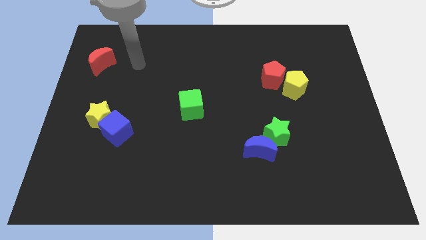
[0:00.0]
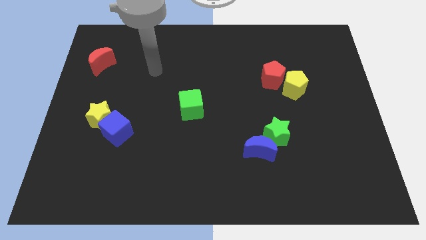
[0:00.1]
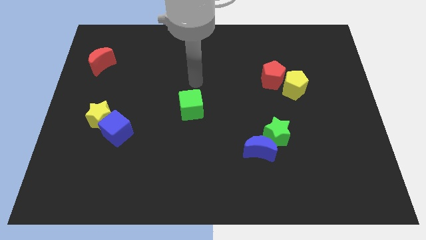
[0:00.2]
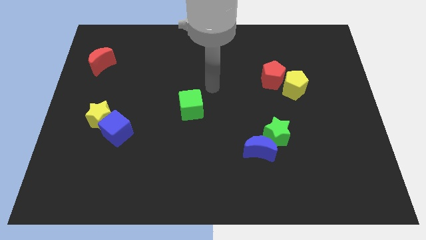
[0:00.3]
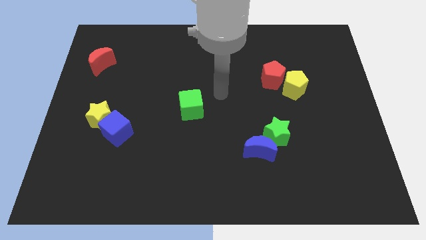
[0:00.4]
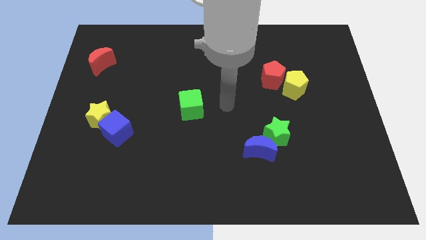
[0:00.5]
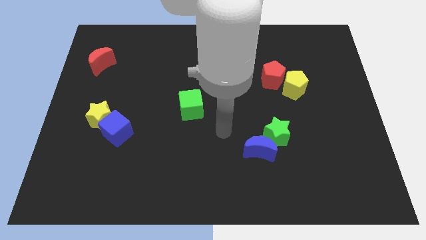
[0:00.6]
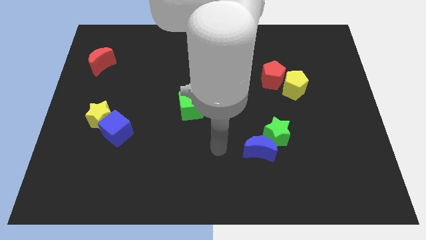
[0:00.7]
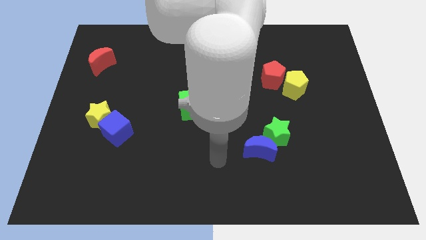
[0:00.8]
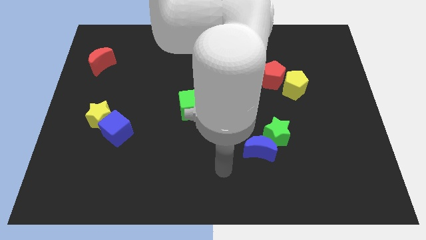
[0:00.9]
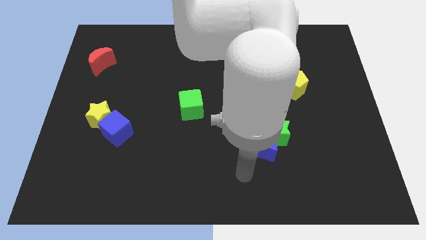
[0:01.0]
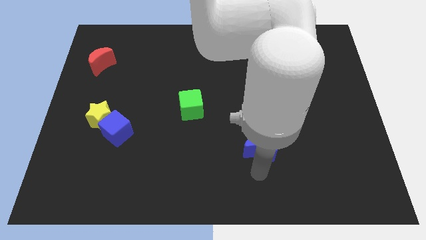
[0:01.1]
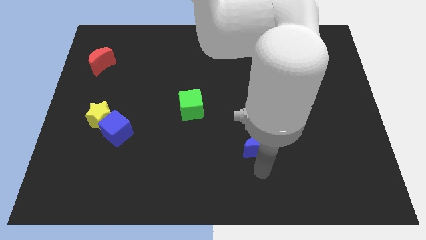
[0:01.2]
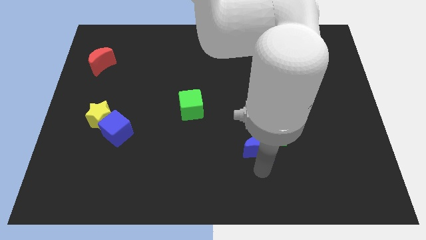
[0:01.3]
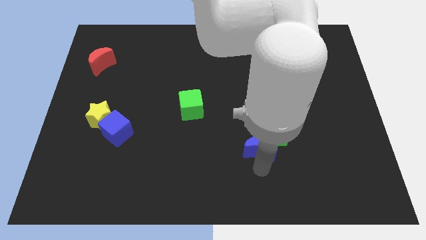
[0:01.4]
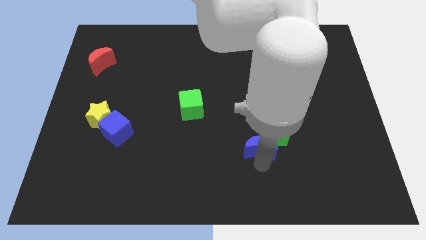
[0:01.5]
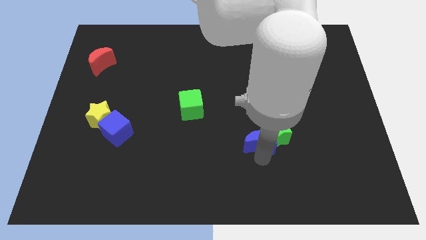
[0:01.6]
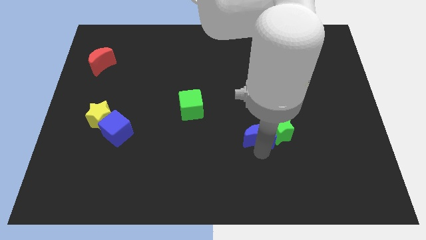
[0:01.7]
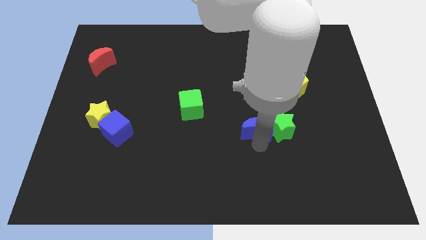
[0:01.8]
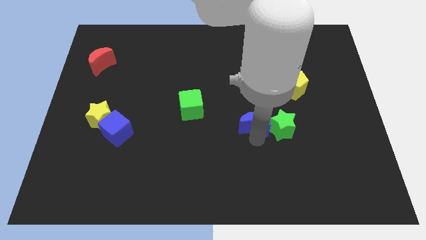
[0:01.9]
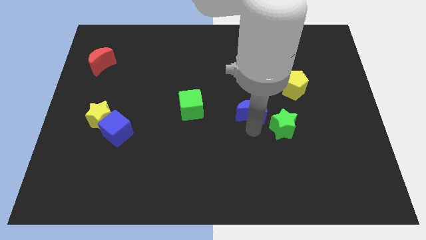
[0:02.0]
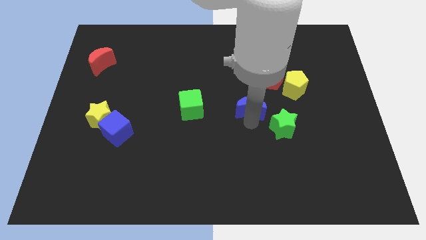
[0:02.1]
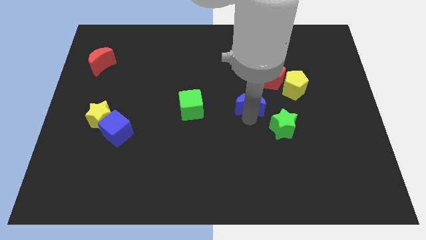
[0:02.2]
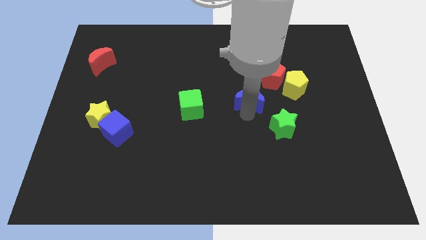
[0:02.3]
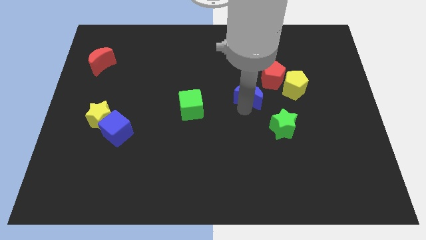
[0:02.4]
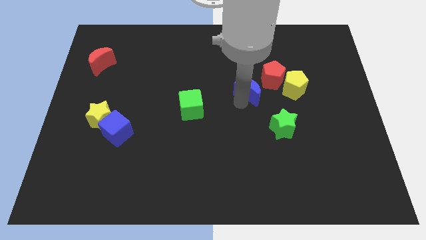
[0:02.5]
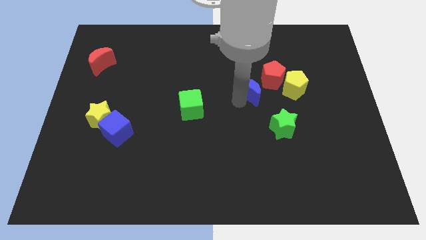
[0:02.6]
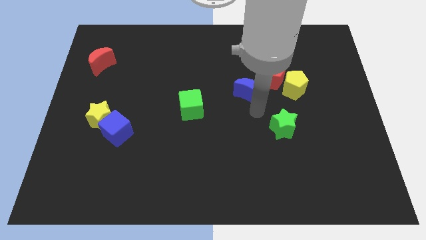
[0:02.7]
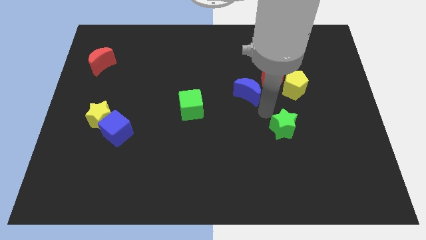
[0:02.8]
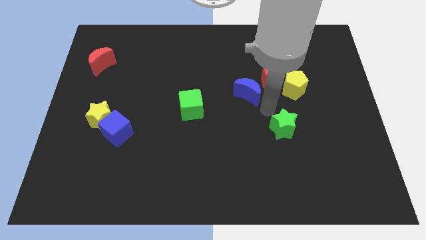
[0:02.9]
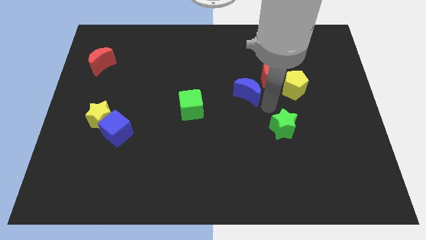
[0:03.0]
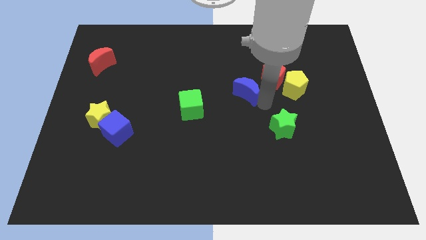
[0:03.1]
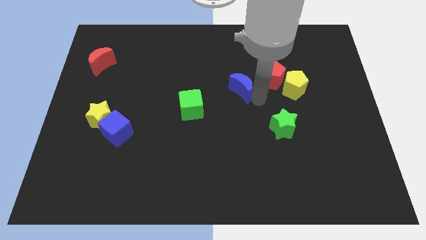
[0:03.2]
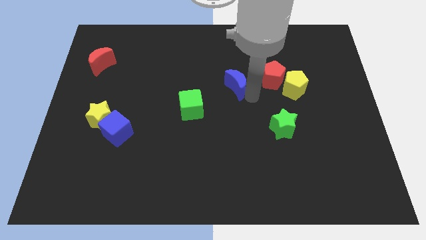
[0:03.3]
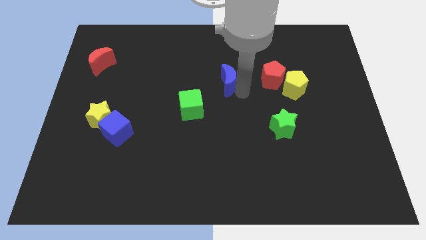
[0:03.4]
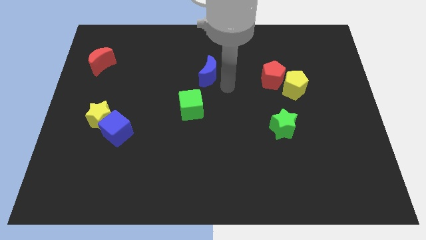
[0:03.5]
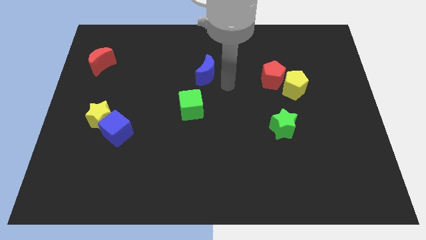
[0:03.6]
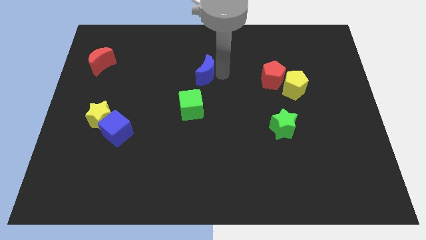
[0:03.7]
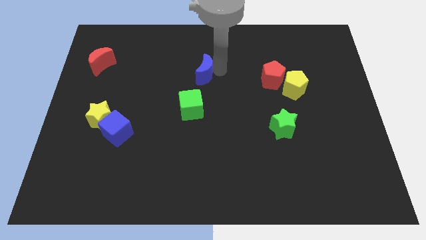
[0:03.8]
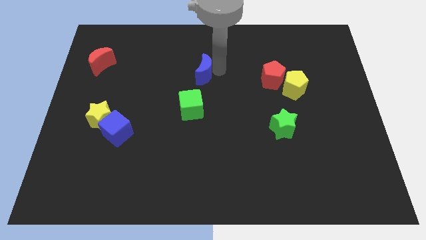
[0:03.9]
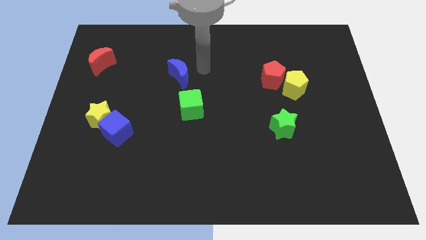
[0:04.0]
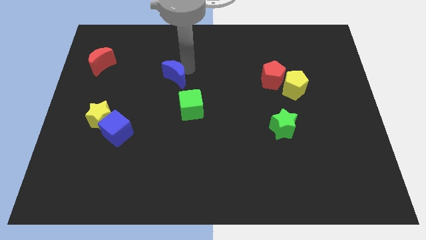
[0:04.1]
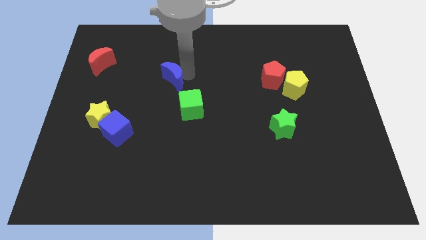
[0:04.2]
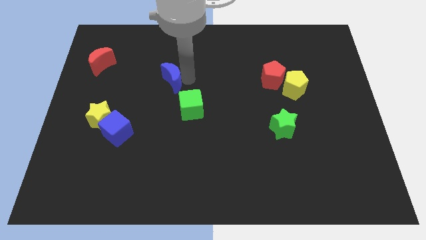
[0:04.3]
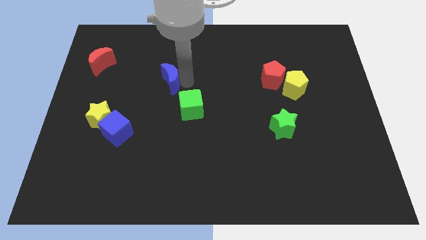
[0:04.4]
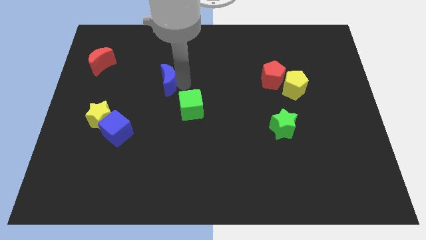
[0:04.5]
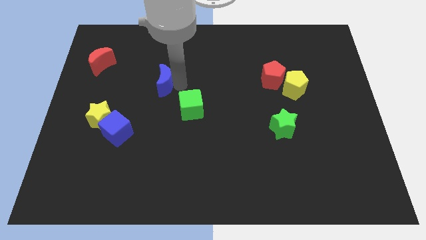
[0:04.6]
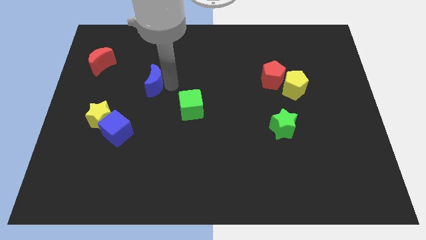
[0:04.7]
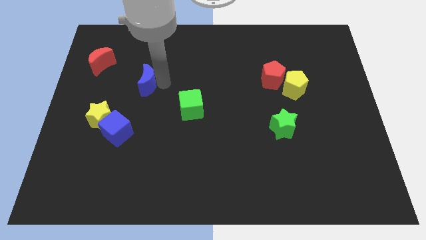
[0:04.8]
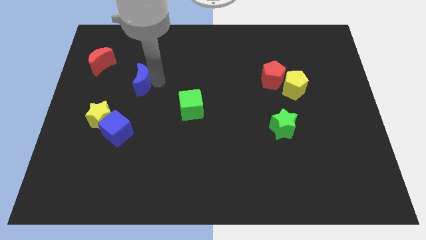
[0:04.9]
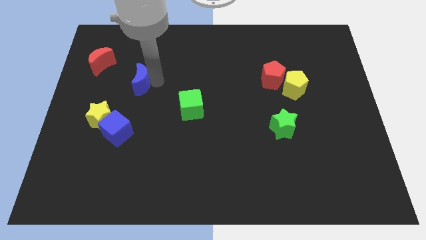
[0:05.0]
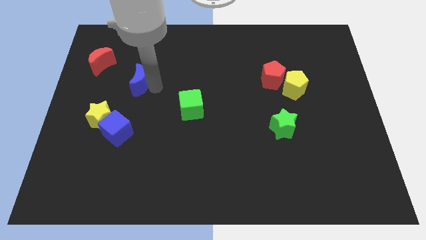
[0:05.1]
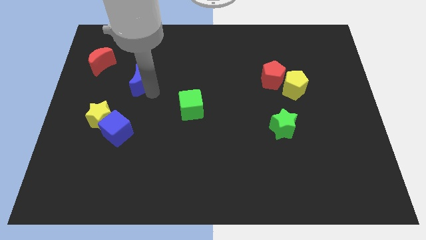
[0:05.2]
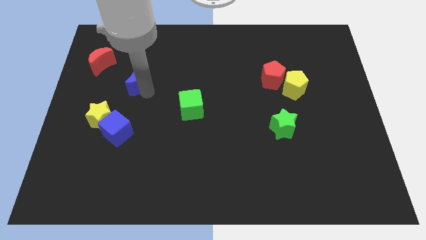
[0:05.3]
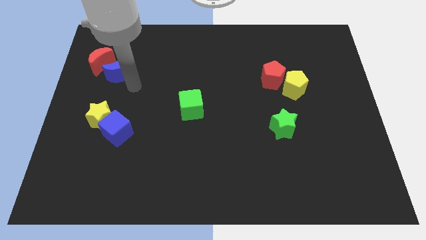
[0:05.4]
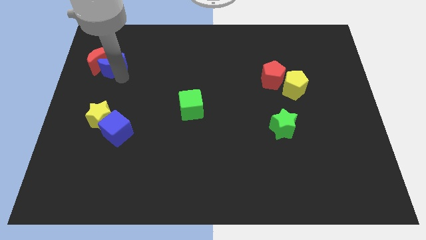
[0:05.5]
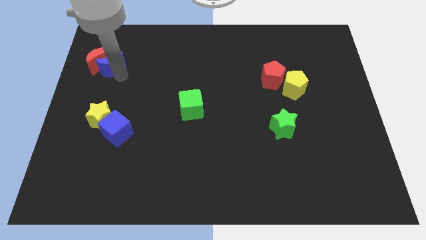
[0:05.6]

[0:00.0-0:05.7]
push the blue moon to the red moon

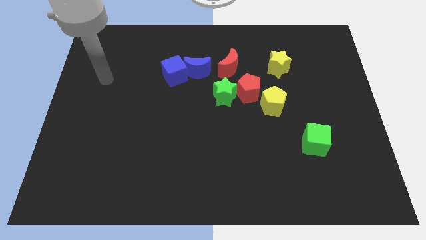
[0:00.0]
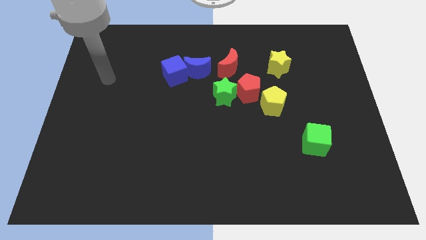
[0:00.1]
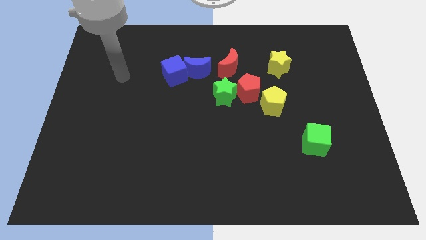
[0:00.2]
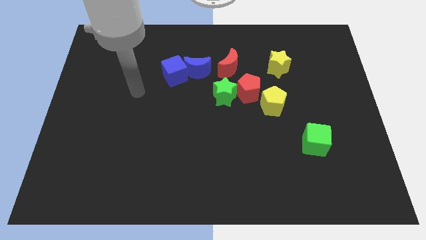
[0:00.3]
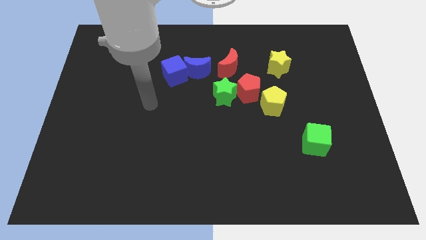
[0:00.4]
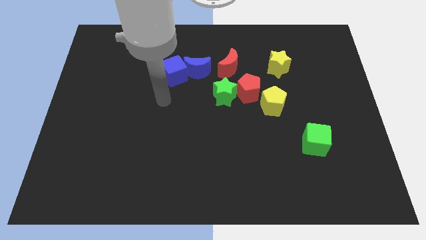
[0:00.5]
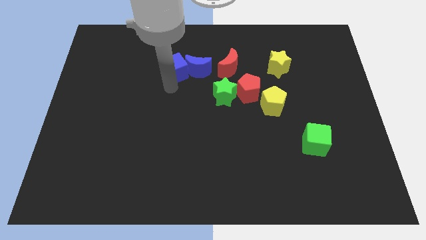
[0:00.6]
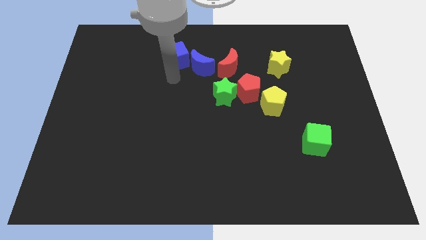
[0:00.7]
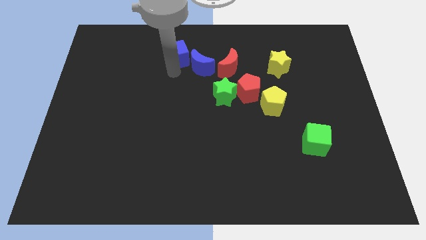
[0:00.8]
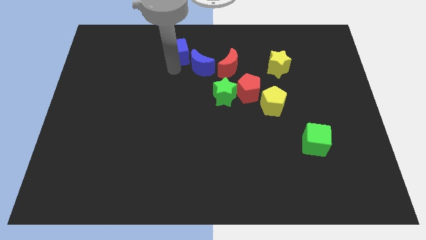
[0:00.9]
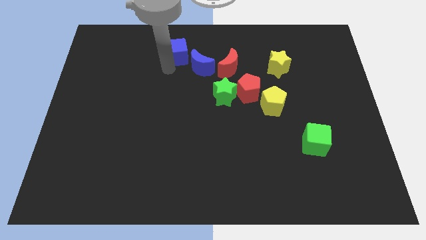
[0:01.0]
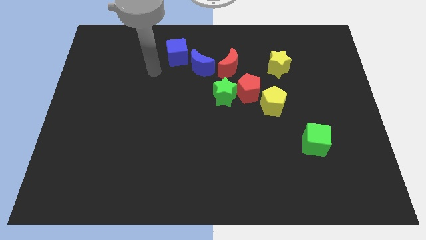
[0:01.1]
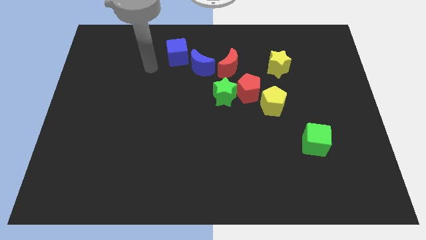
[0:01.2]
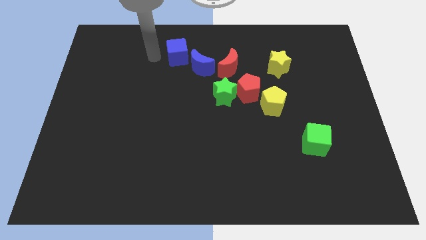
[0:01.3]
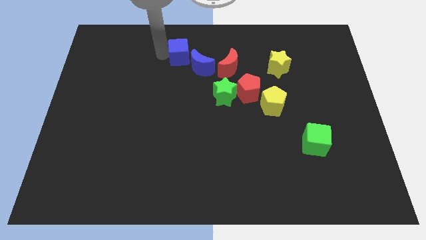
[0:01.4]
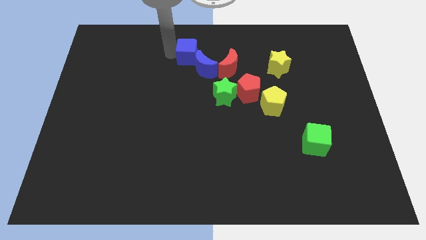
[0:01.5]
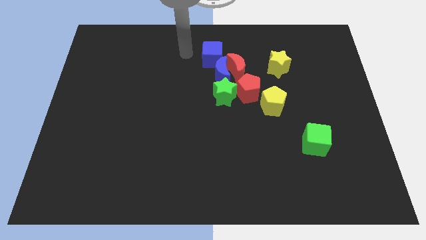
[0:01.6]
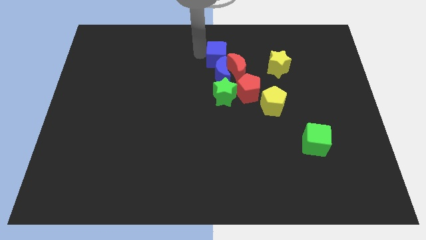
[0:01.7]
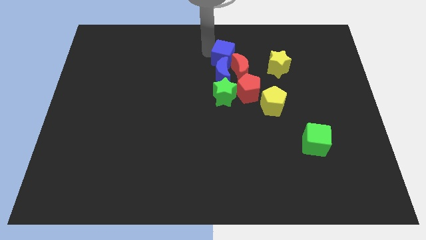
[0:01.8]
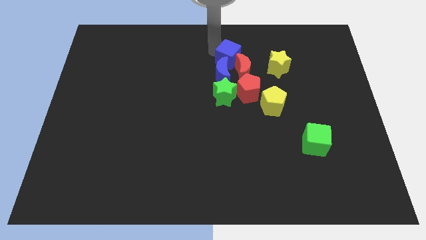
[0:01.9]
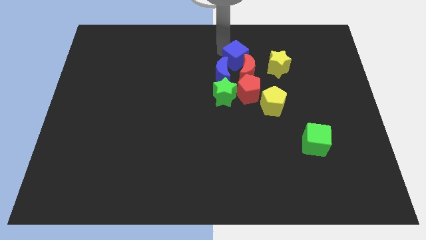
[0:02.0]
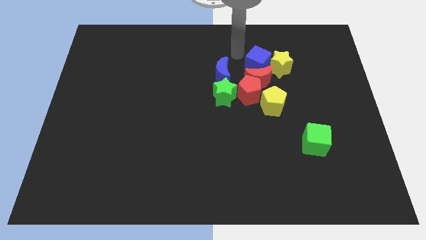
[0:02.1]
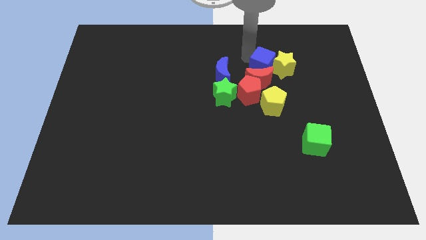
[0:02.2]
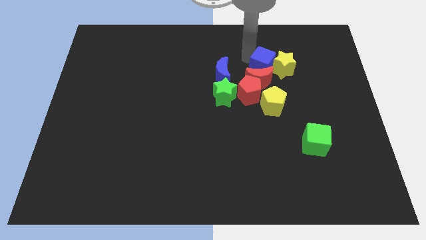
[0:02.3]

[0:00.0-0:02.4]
push the blue cube close to the yellow star

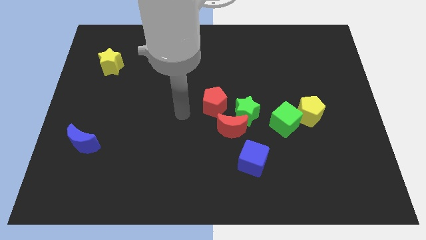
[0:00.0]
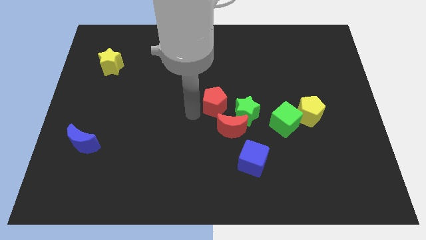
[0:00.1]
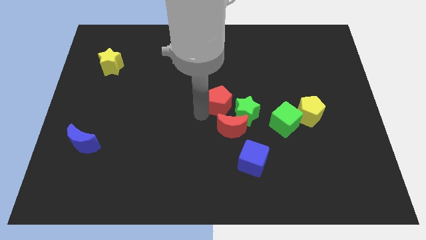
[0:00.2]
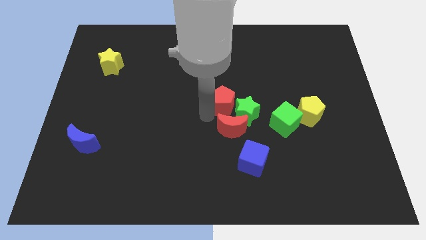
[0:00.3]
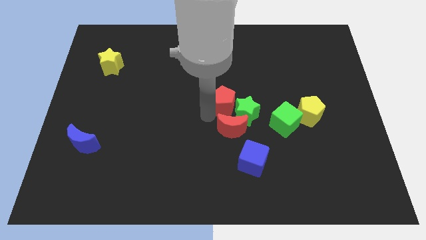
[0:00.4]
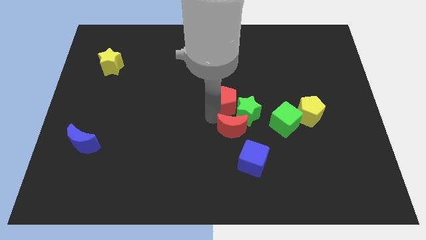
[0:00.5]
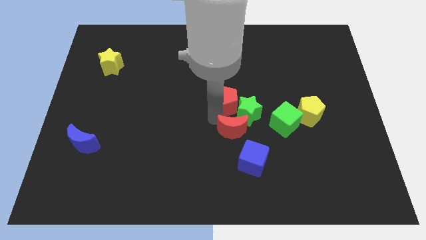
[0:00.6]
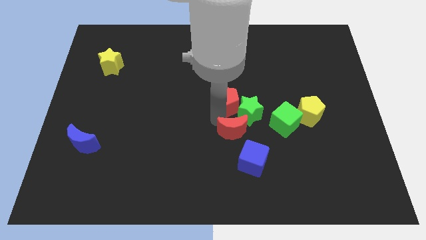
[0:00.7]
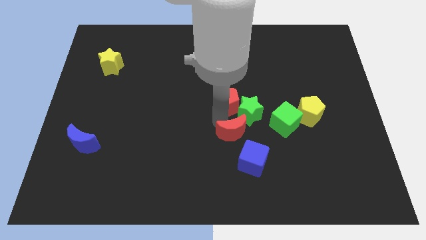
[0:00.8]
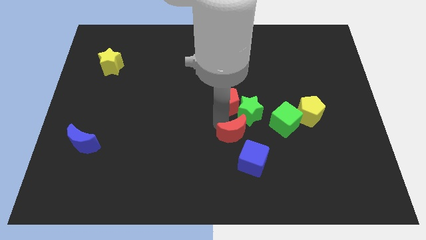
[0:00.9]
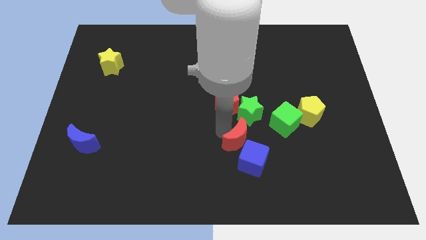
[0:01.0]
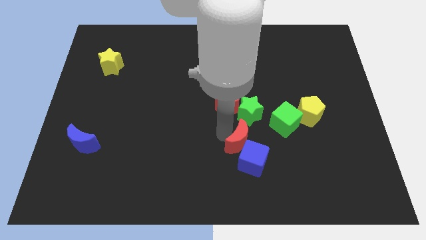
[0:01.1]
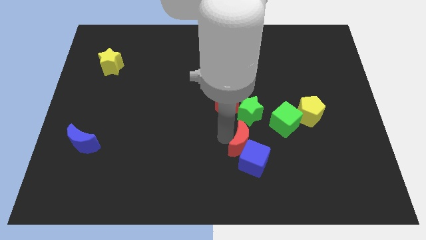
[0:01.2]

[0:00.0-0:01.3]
push the red moon to the blue cube
